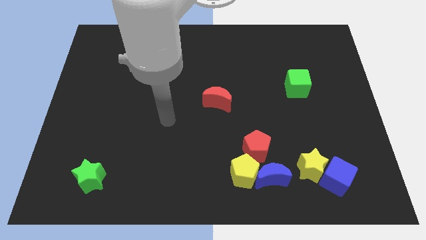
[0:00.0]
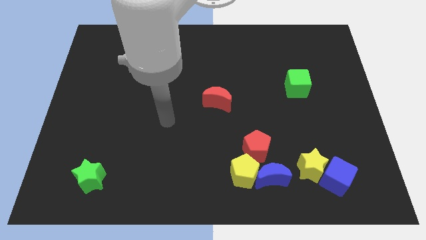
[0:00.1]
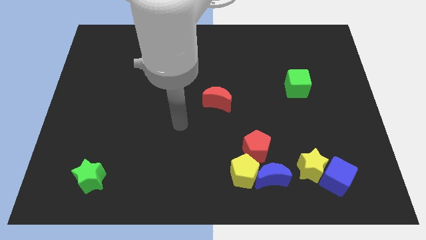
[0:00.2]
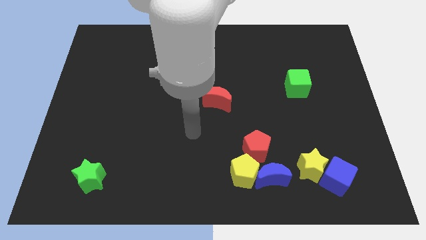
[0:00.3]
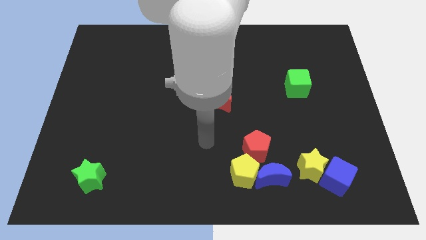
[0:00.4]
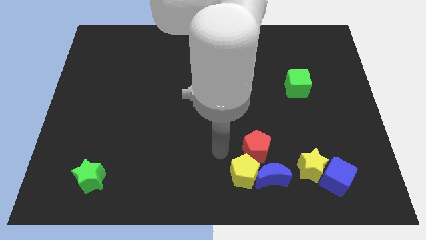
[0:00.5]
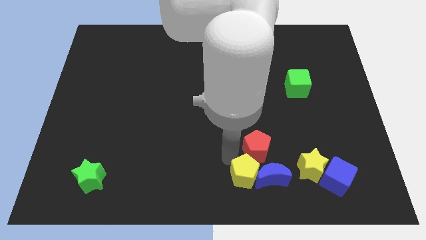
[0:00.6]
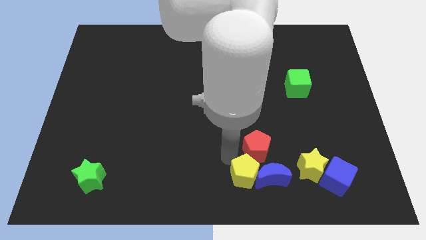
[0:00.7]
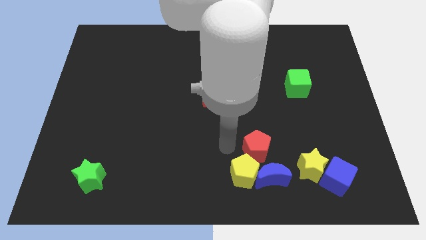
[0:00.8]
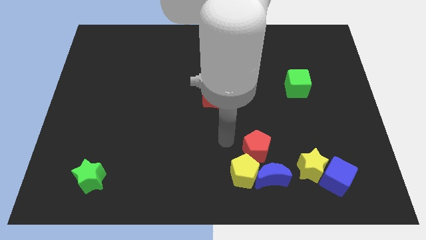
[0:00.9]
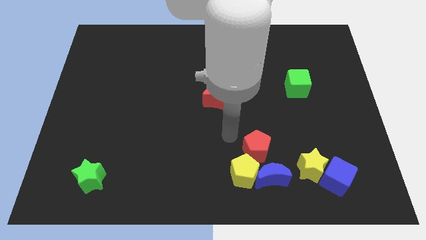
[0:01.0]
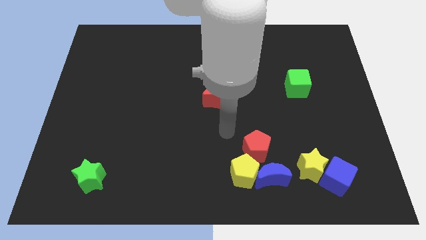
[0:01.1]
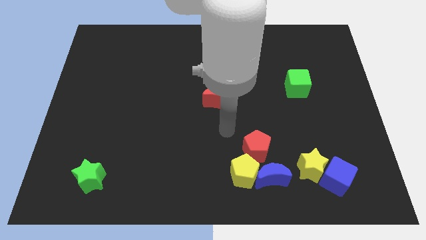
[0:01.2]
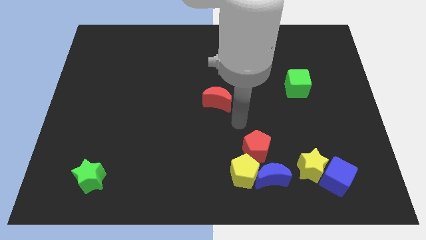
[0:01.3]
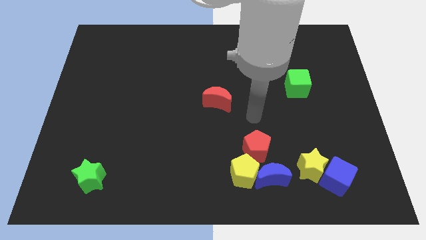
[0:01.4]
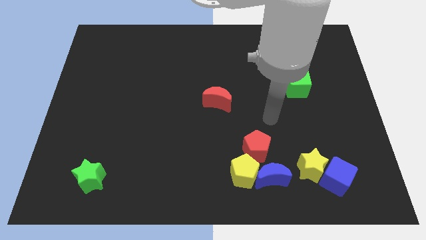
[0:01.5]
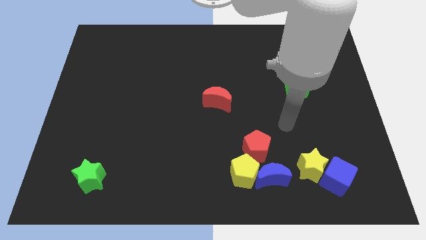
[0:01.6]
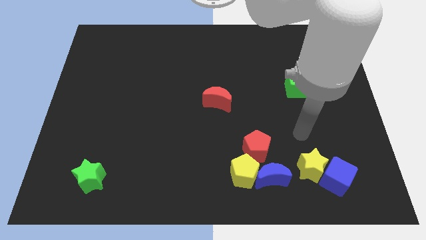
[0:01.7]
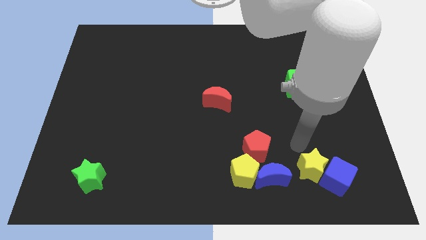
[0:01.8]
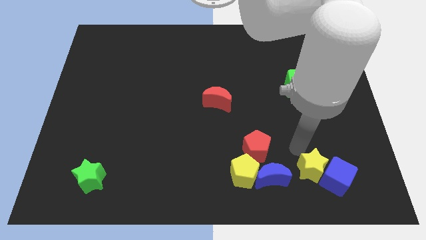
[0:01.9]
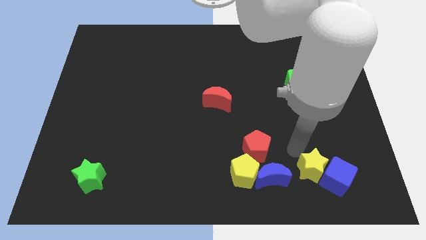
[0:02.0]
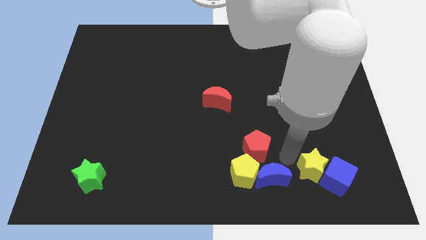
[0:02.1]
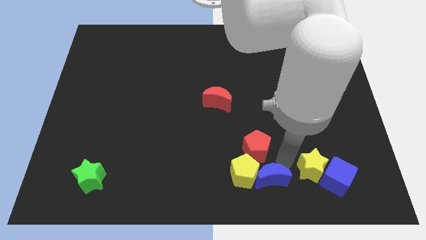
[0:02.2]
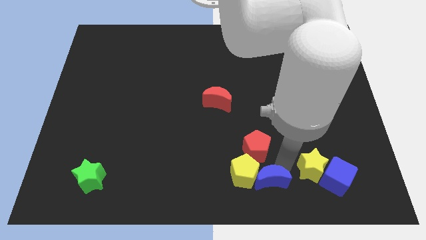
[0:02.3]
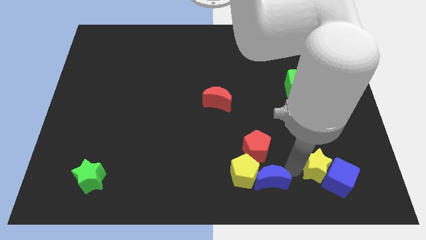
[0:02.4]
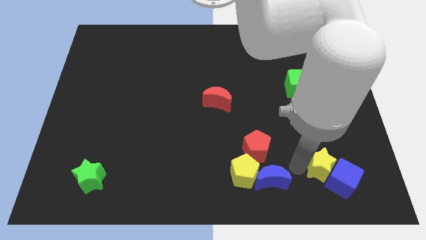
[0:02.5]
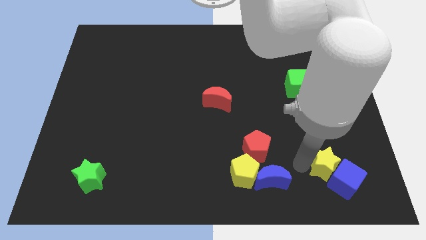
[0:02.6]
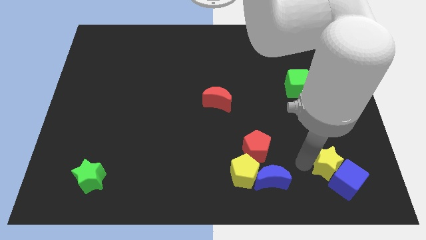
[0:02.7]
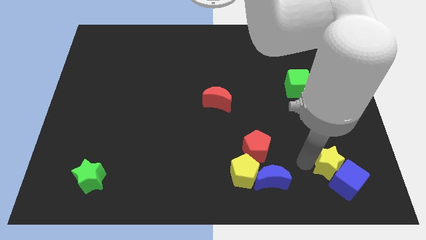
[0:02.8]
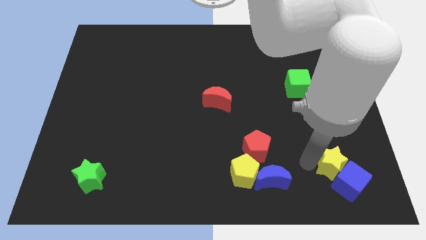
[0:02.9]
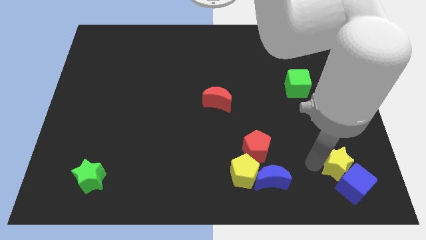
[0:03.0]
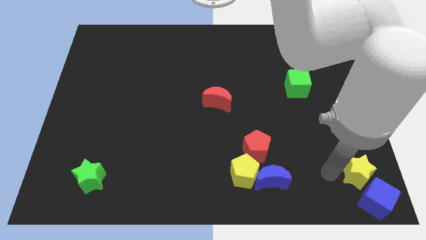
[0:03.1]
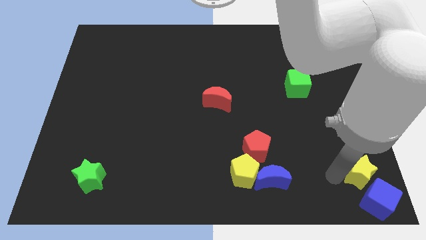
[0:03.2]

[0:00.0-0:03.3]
push the yellow star and blue cube to bottom right corner

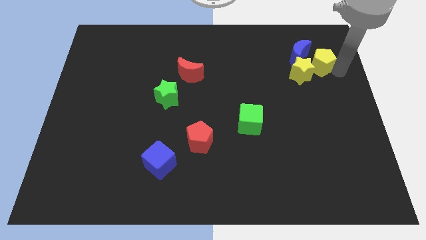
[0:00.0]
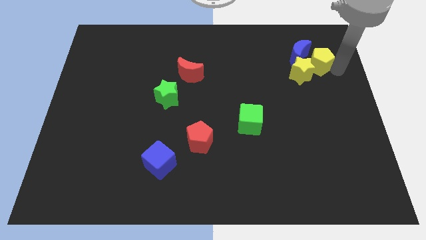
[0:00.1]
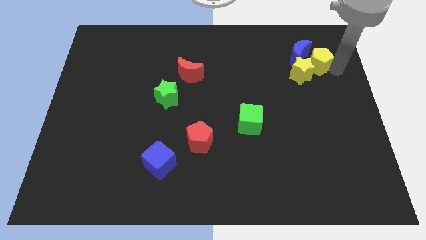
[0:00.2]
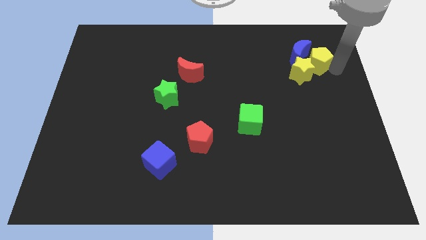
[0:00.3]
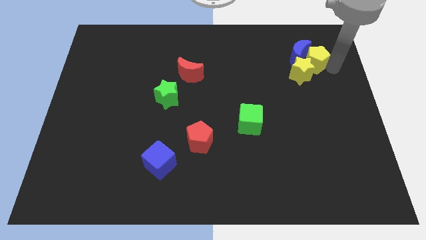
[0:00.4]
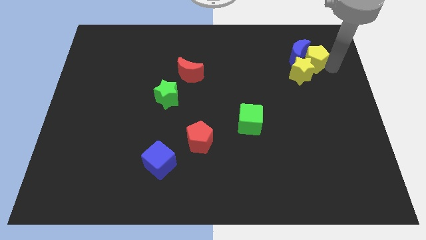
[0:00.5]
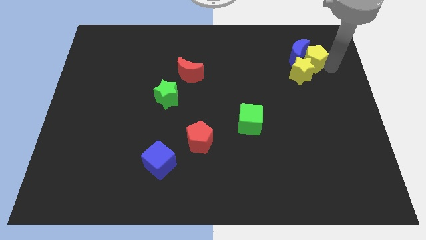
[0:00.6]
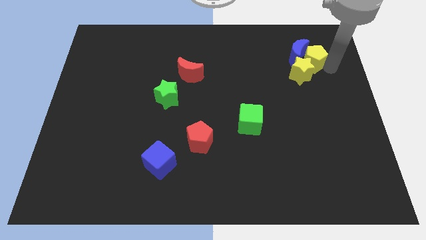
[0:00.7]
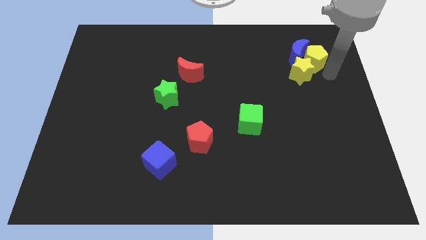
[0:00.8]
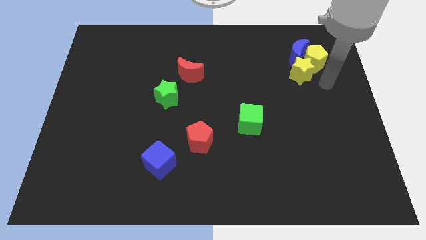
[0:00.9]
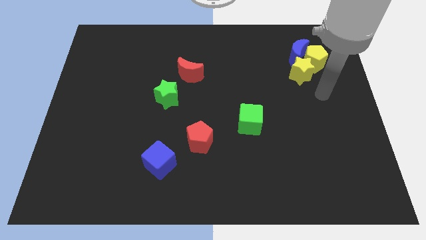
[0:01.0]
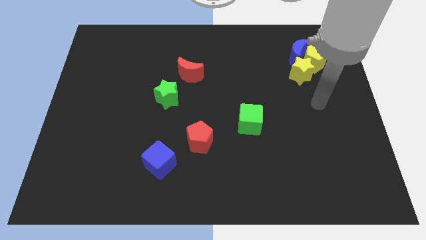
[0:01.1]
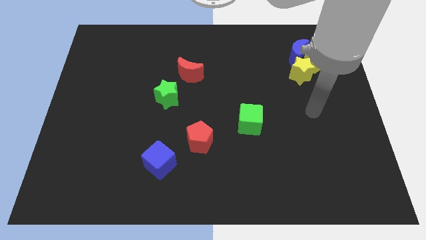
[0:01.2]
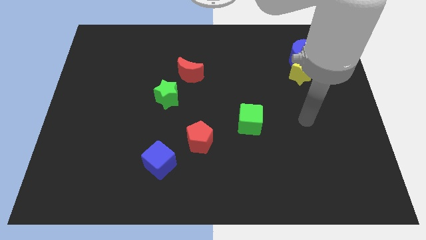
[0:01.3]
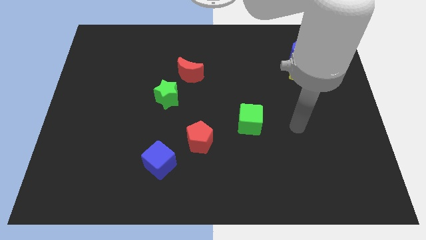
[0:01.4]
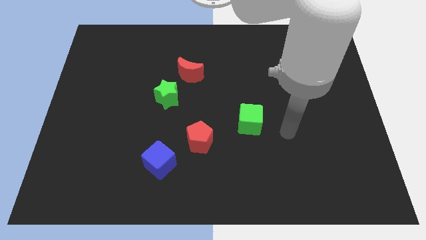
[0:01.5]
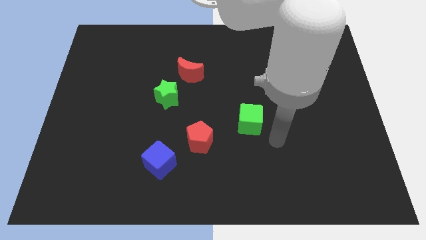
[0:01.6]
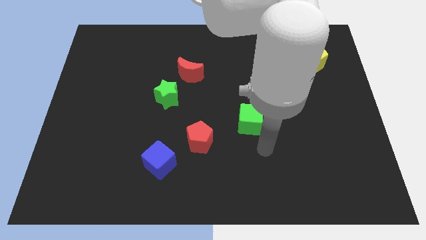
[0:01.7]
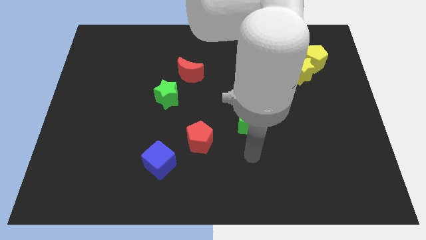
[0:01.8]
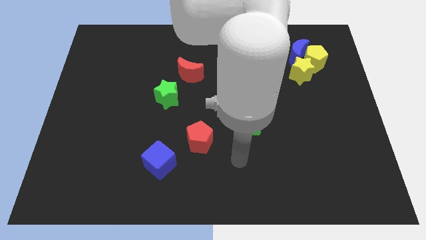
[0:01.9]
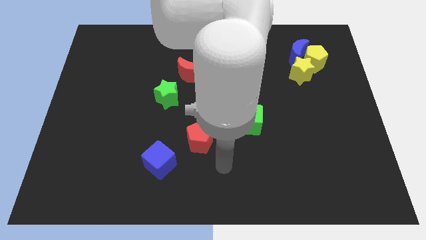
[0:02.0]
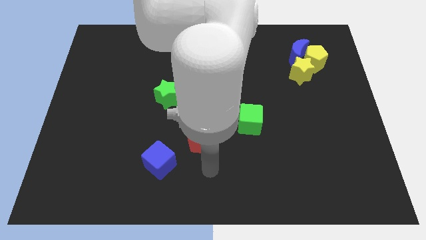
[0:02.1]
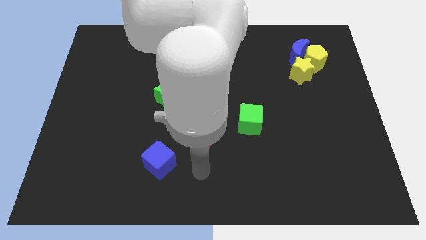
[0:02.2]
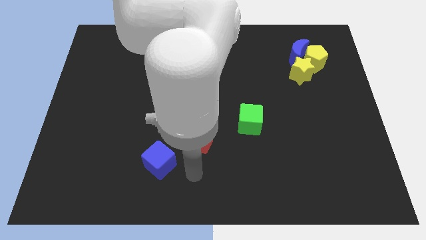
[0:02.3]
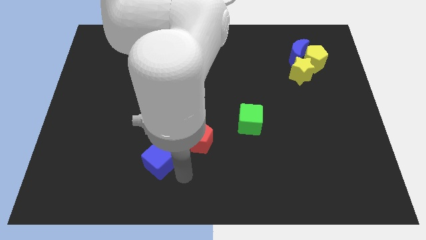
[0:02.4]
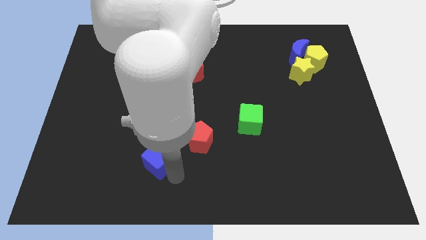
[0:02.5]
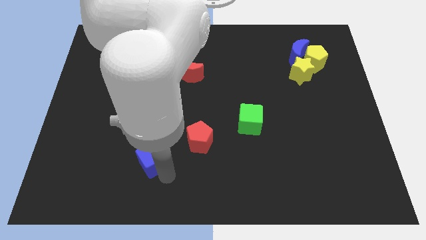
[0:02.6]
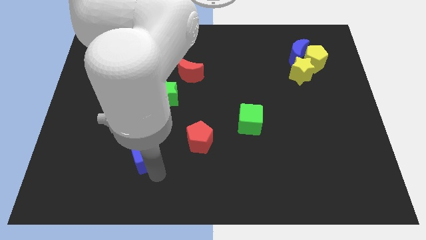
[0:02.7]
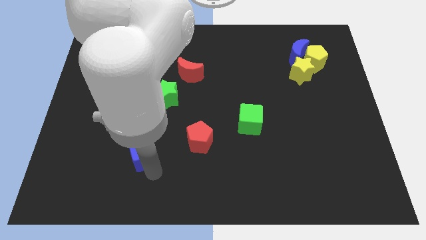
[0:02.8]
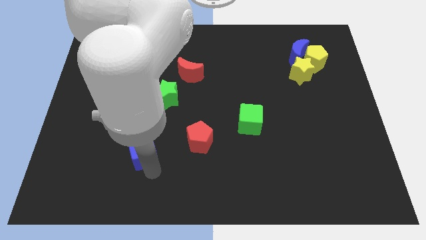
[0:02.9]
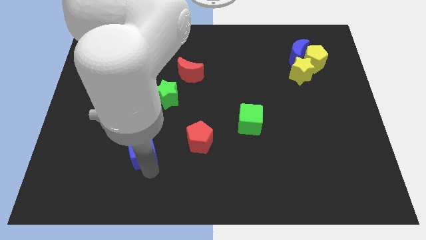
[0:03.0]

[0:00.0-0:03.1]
move your arm below to the blue cube

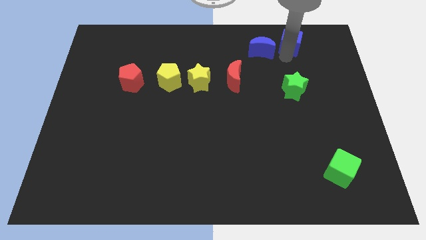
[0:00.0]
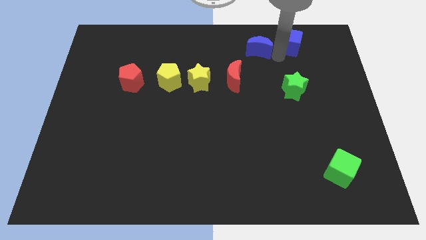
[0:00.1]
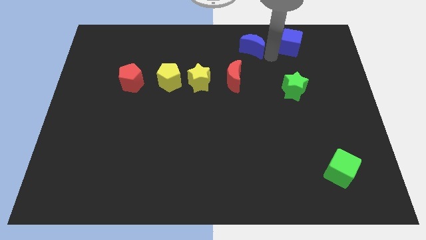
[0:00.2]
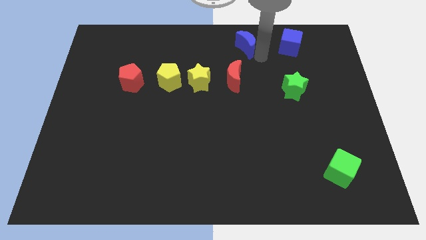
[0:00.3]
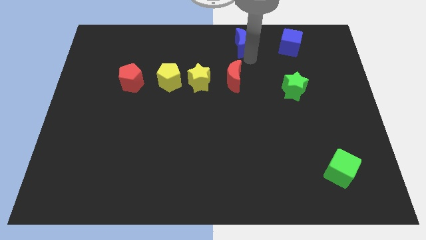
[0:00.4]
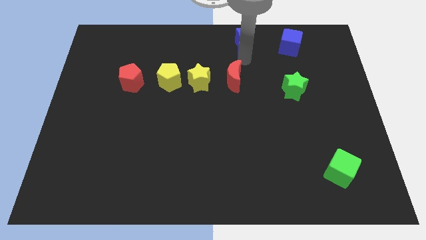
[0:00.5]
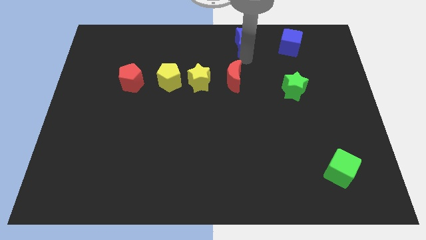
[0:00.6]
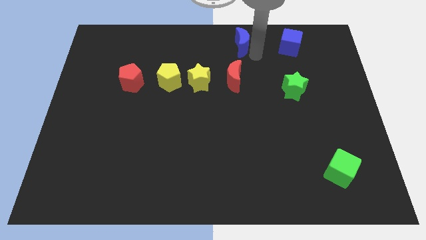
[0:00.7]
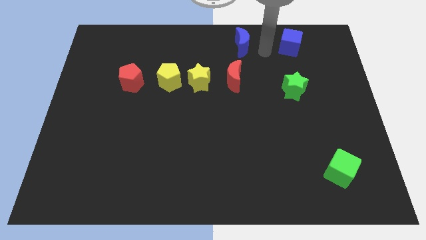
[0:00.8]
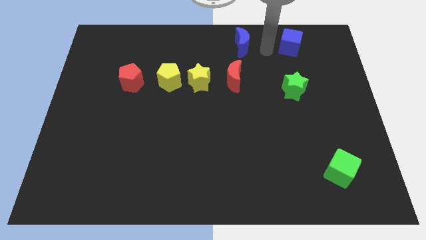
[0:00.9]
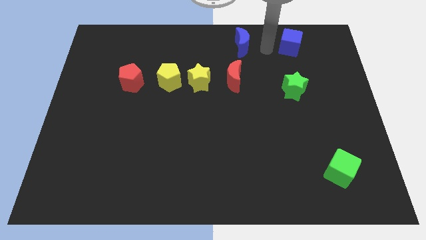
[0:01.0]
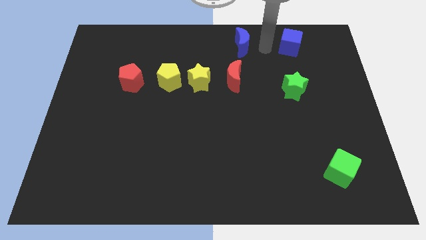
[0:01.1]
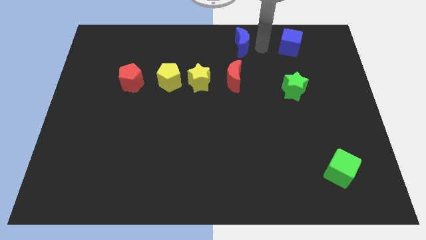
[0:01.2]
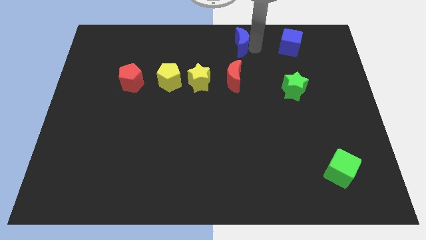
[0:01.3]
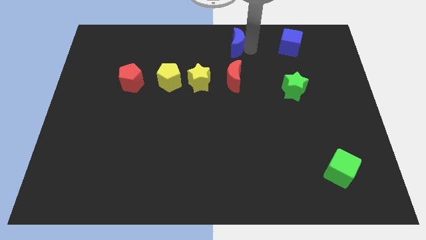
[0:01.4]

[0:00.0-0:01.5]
put the blue moon vertically above the red moon

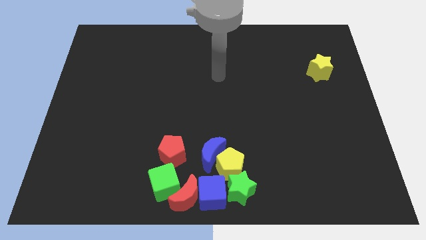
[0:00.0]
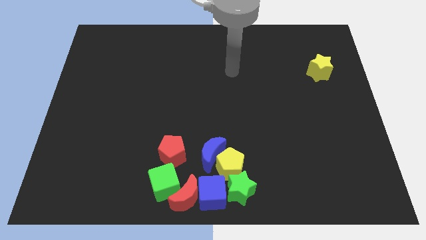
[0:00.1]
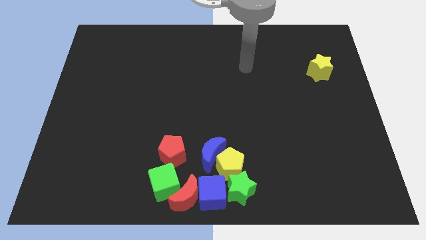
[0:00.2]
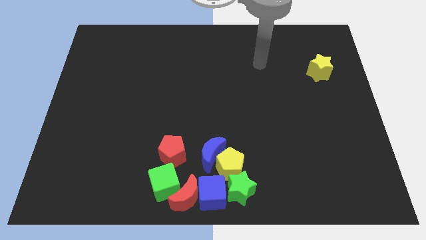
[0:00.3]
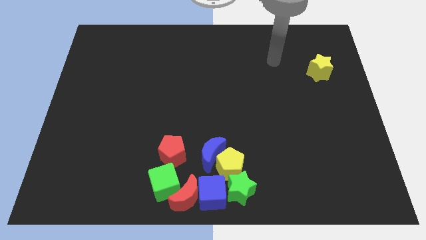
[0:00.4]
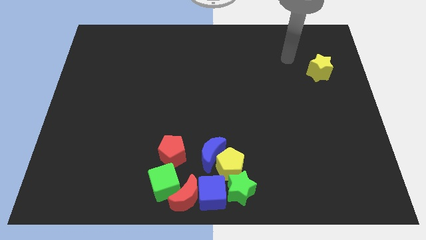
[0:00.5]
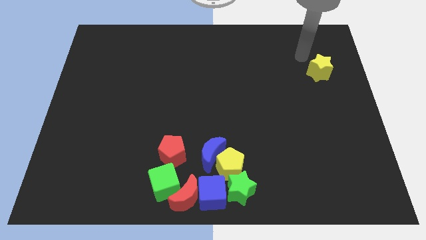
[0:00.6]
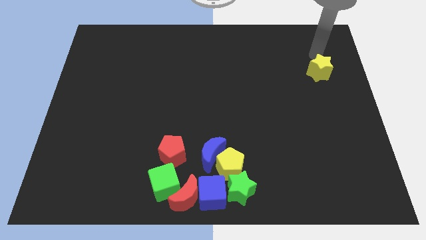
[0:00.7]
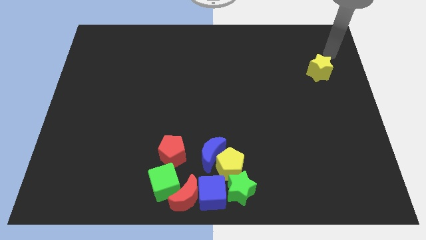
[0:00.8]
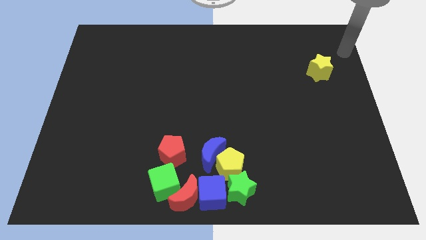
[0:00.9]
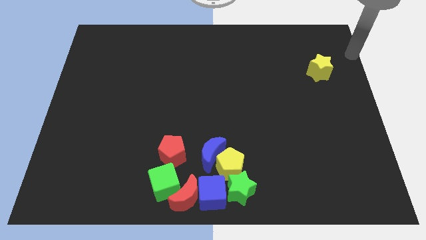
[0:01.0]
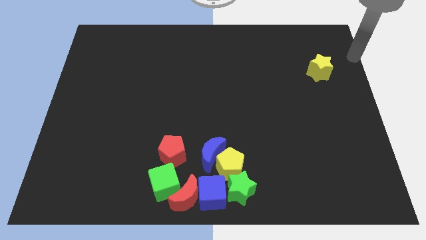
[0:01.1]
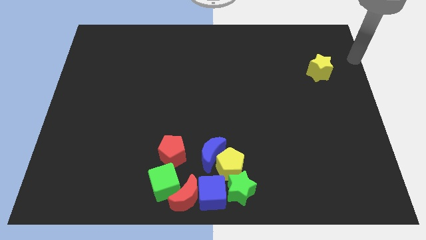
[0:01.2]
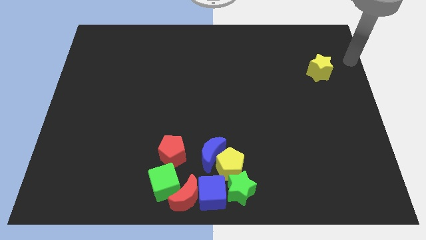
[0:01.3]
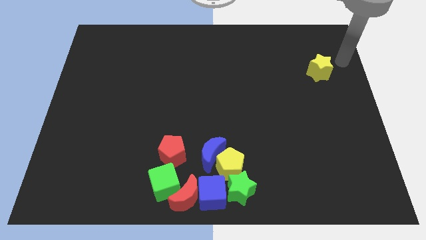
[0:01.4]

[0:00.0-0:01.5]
move your arm diagonally right to the yellow star
